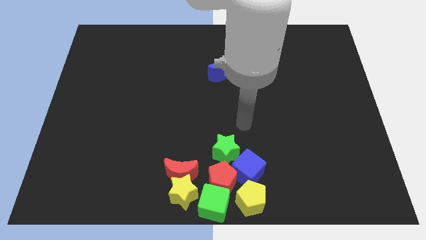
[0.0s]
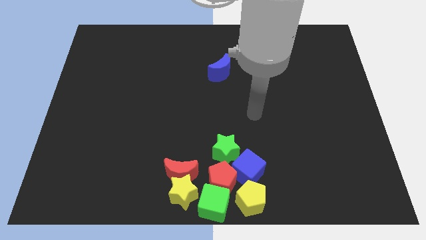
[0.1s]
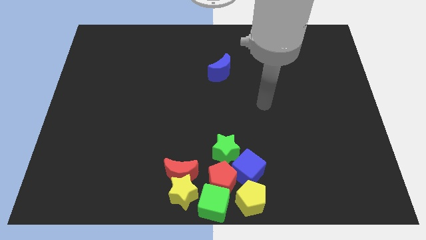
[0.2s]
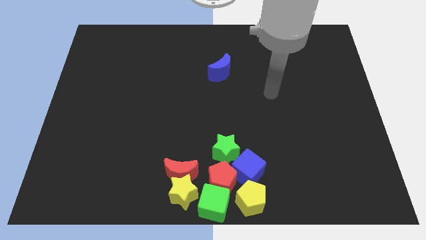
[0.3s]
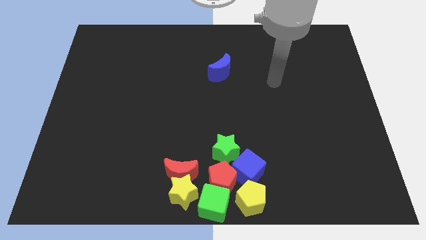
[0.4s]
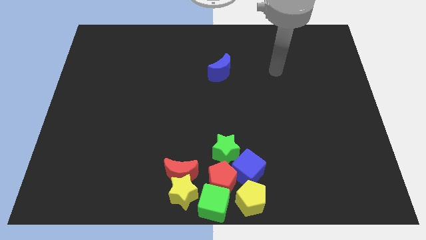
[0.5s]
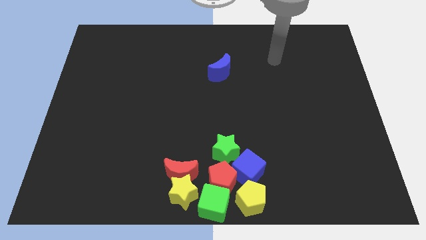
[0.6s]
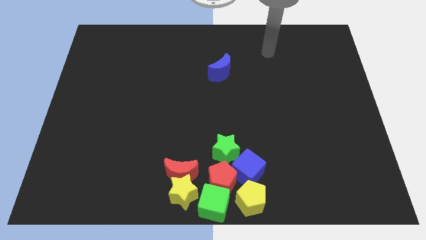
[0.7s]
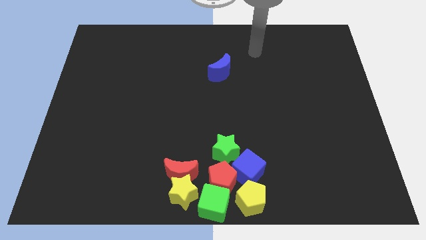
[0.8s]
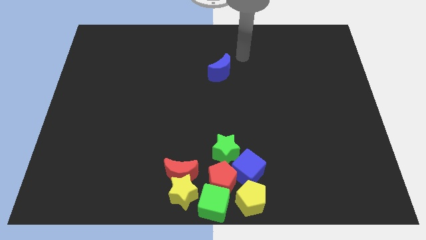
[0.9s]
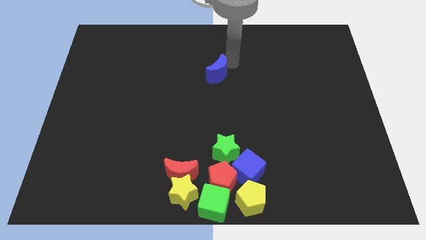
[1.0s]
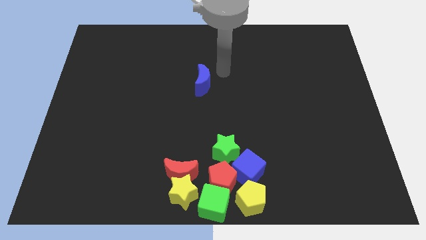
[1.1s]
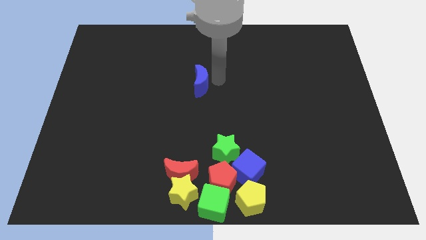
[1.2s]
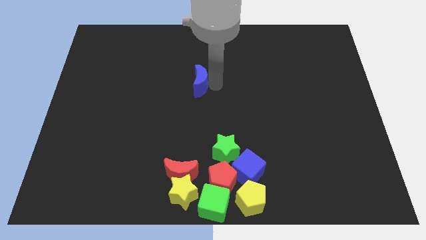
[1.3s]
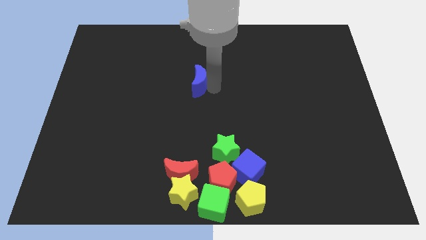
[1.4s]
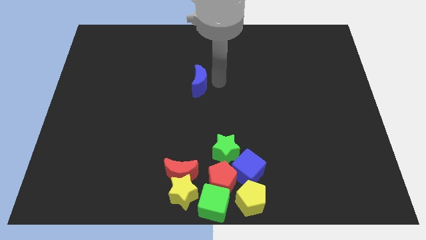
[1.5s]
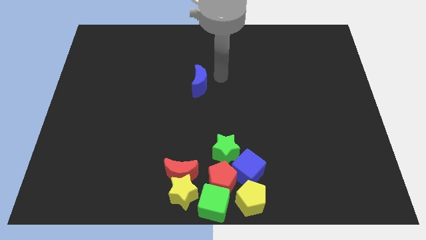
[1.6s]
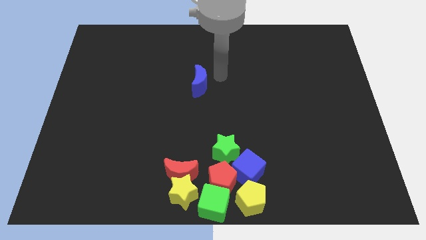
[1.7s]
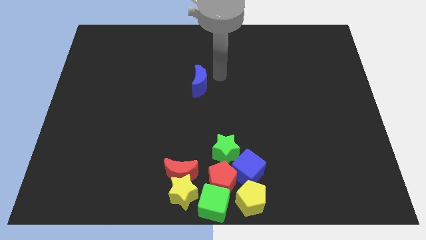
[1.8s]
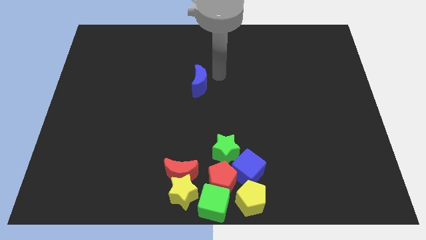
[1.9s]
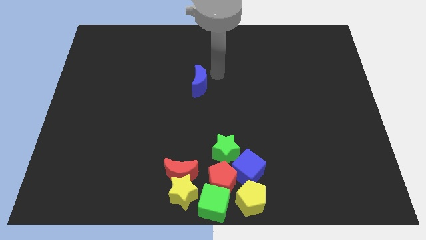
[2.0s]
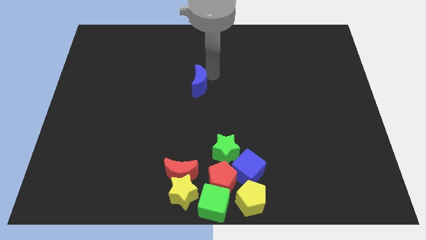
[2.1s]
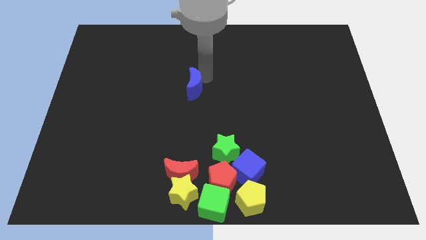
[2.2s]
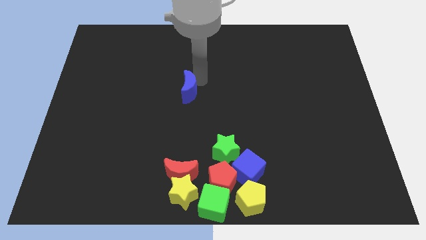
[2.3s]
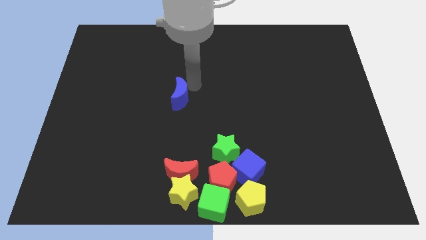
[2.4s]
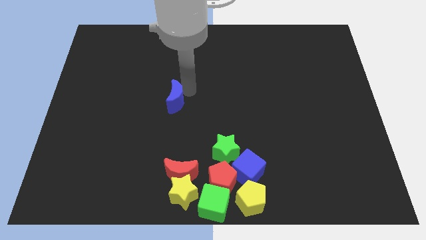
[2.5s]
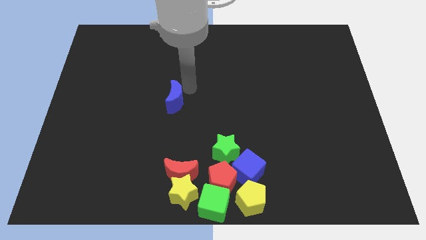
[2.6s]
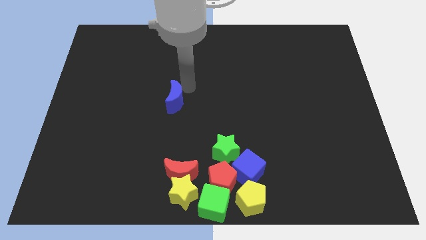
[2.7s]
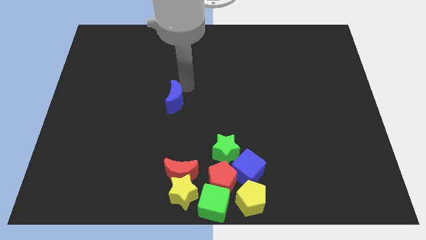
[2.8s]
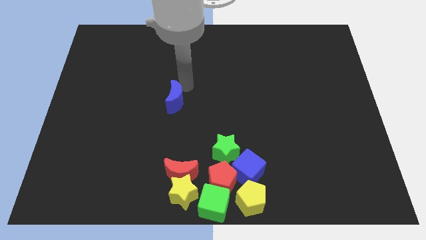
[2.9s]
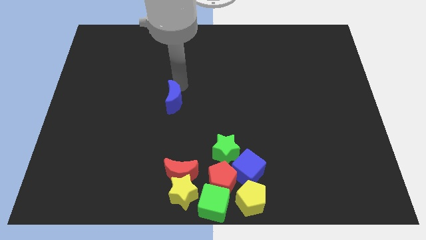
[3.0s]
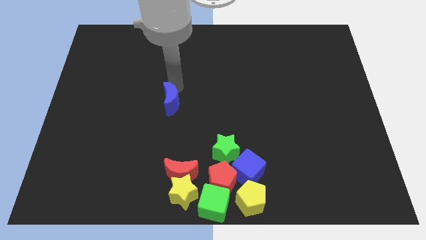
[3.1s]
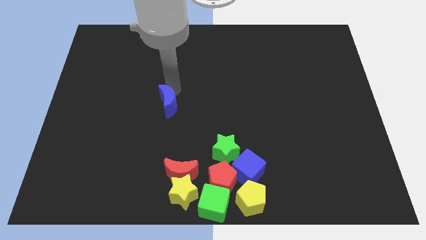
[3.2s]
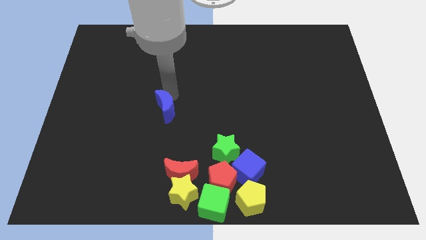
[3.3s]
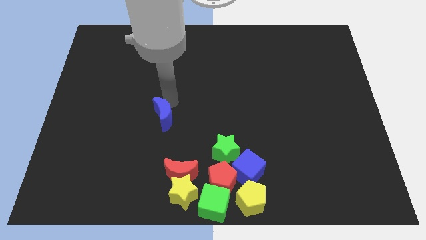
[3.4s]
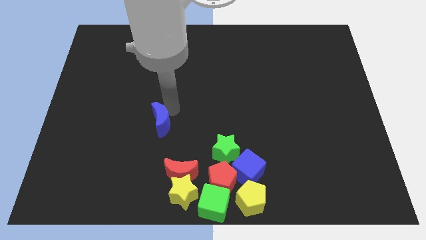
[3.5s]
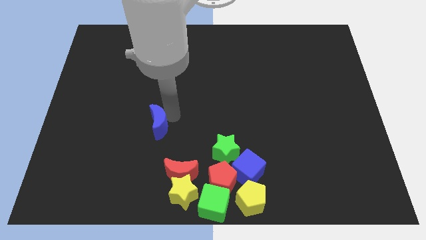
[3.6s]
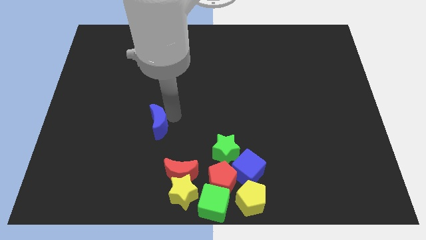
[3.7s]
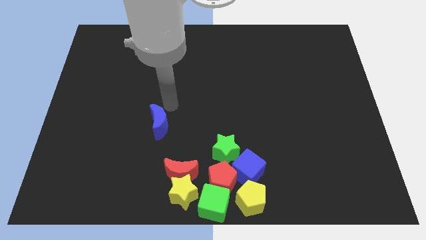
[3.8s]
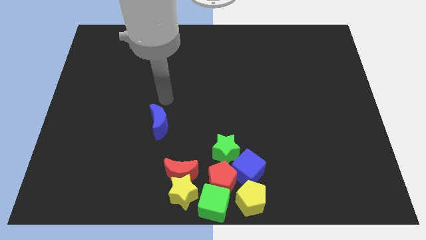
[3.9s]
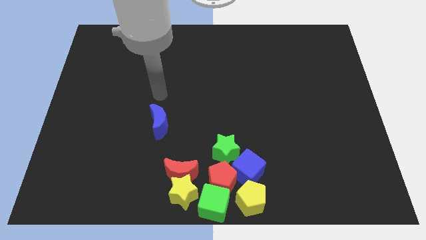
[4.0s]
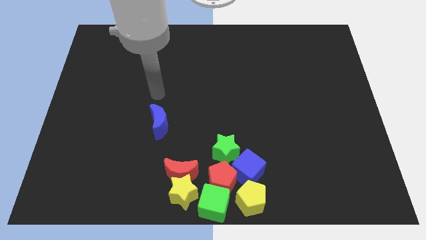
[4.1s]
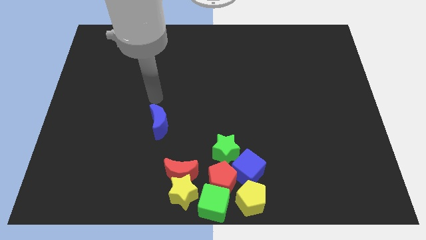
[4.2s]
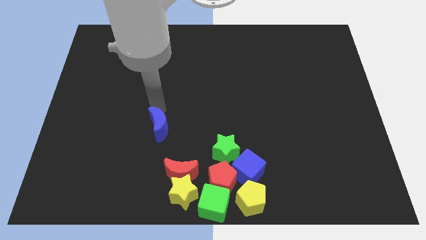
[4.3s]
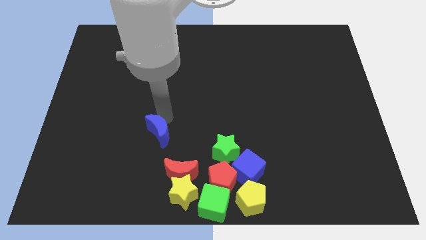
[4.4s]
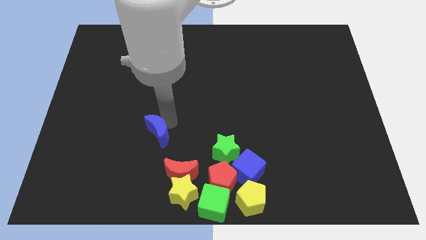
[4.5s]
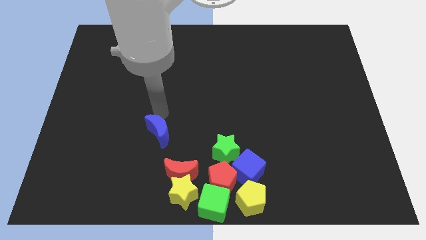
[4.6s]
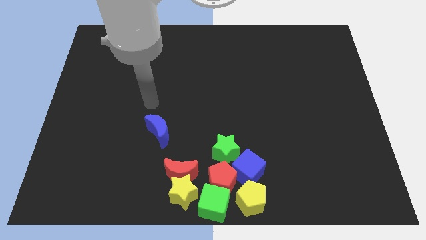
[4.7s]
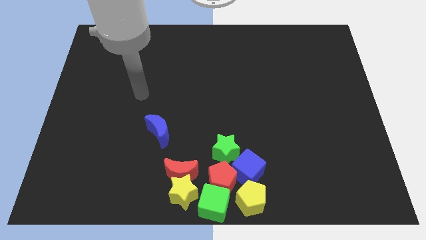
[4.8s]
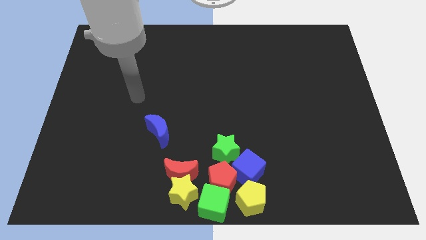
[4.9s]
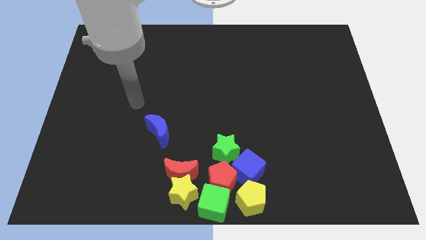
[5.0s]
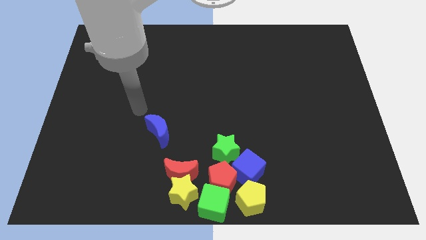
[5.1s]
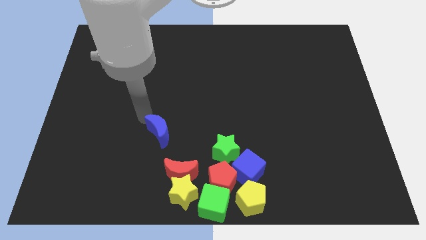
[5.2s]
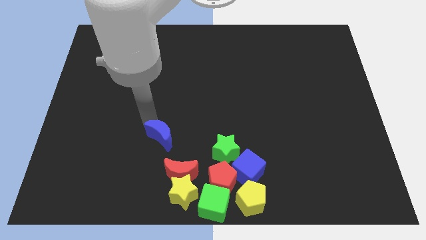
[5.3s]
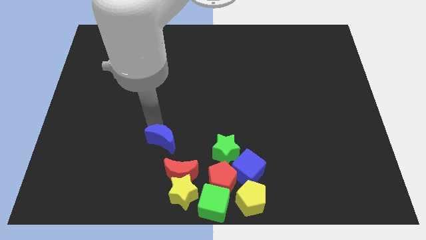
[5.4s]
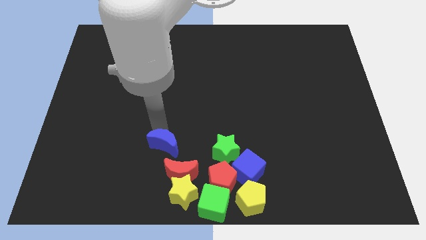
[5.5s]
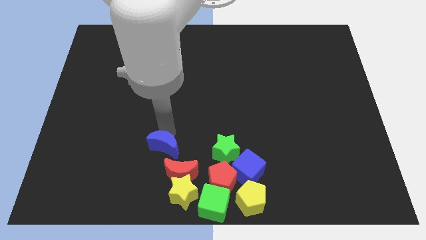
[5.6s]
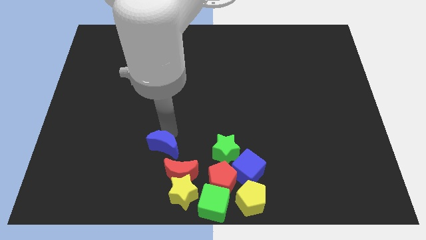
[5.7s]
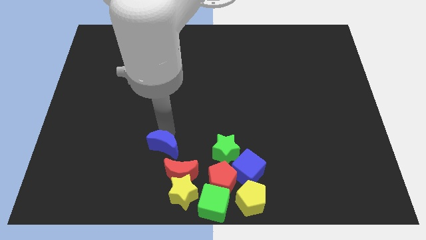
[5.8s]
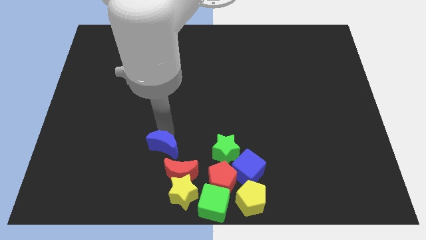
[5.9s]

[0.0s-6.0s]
place the blue crescent above left to the red crescent

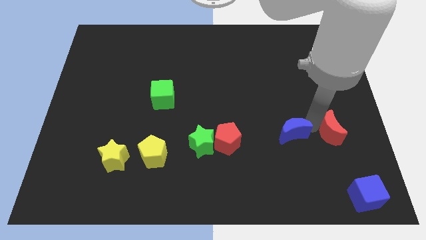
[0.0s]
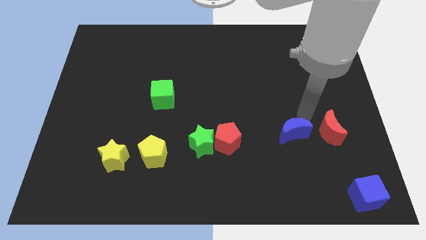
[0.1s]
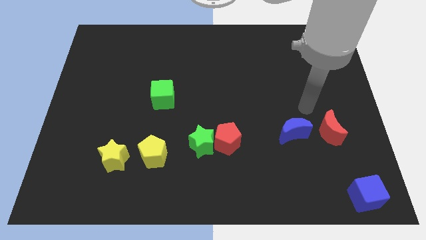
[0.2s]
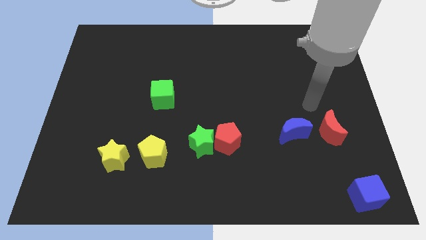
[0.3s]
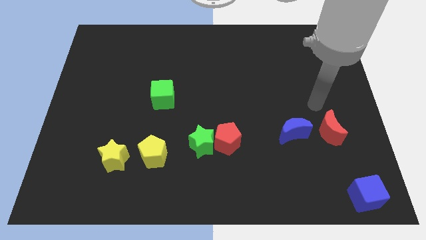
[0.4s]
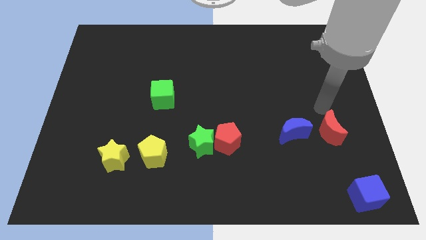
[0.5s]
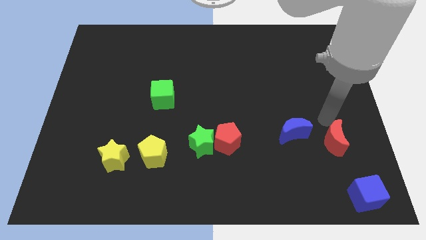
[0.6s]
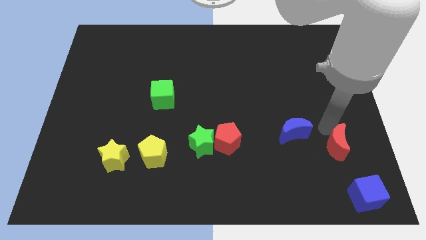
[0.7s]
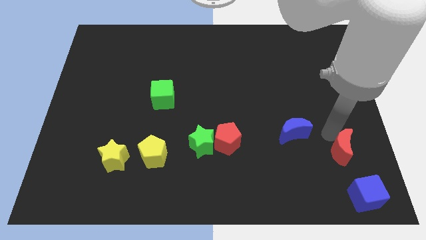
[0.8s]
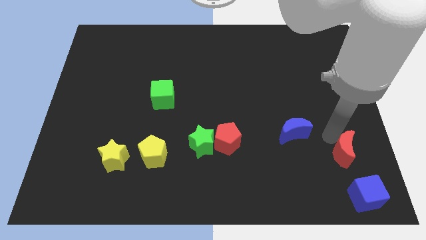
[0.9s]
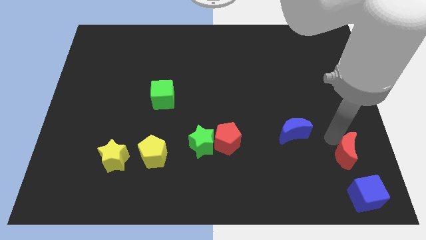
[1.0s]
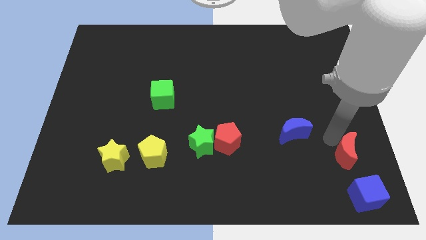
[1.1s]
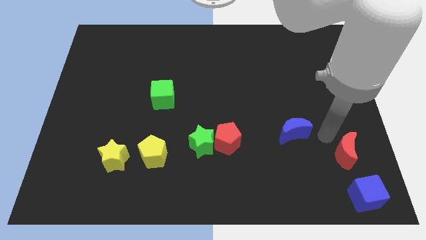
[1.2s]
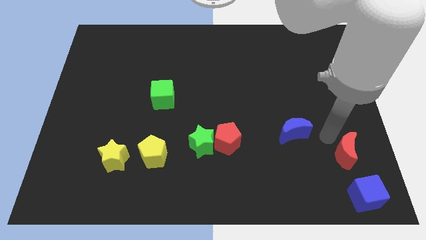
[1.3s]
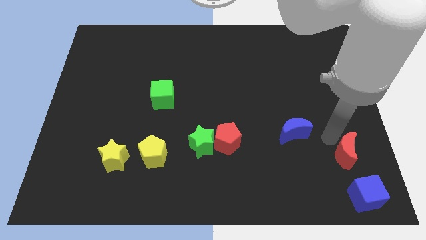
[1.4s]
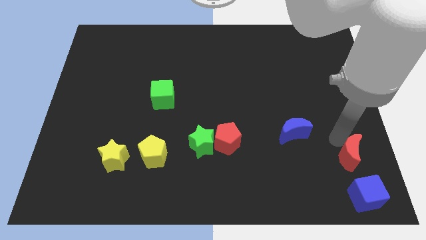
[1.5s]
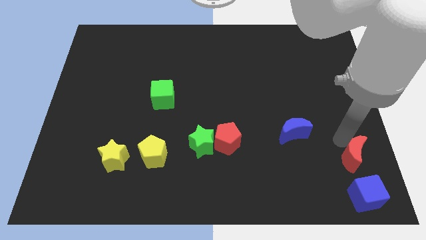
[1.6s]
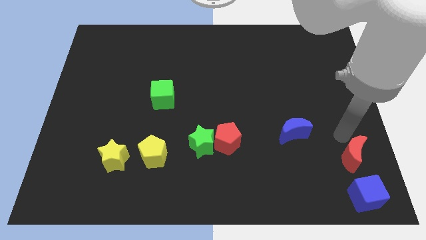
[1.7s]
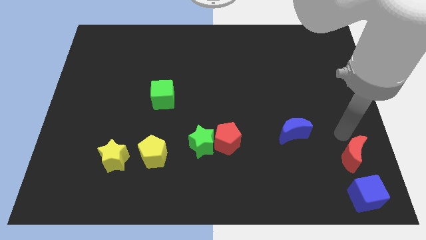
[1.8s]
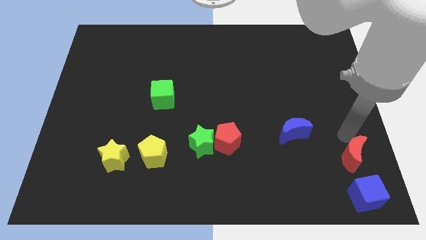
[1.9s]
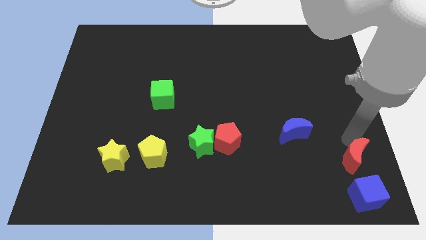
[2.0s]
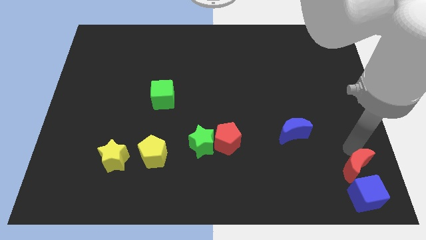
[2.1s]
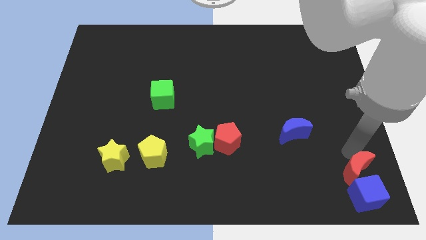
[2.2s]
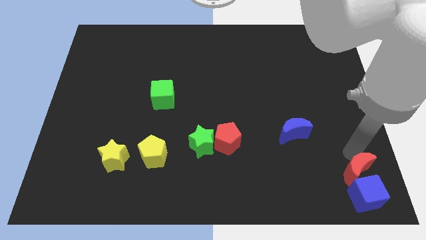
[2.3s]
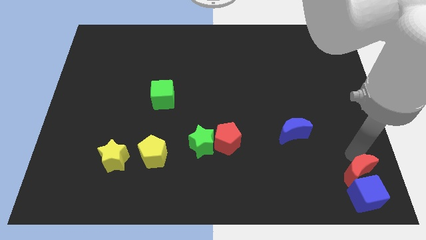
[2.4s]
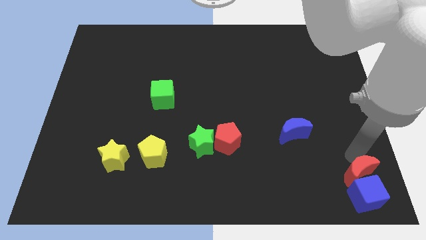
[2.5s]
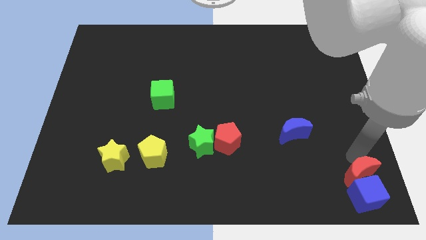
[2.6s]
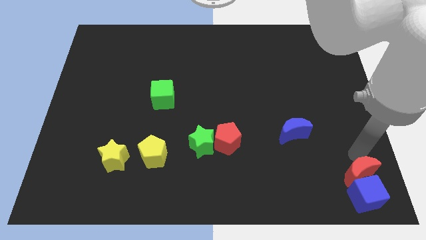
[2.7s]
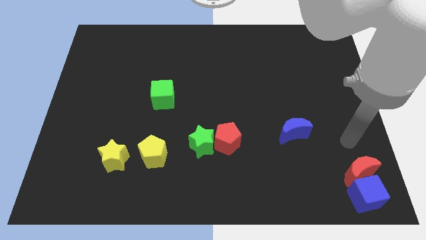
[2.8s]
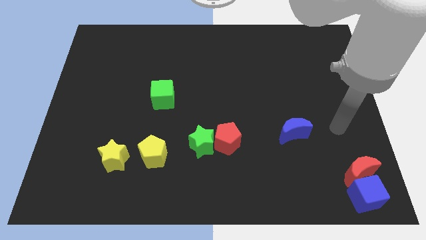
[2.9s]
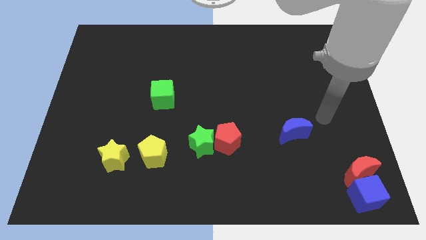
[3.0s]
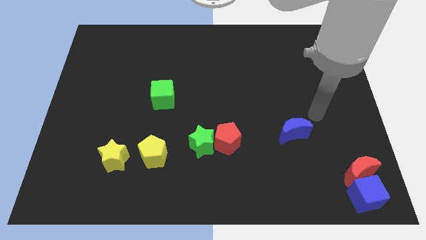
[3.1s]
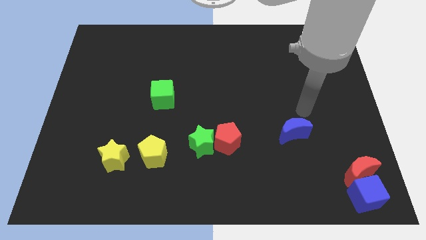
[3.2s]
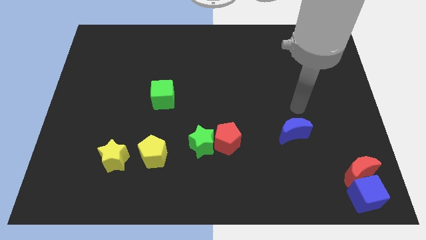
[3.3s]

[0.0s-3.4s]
place the red moon above the blue cube
